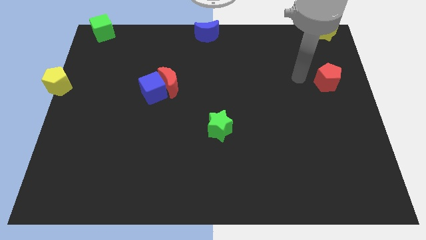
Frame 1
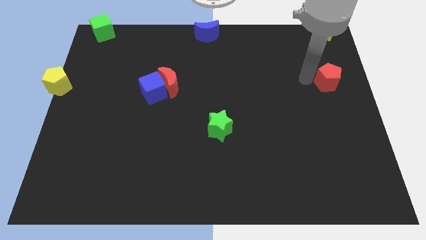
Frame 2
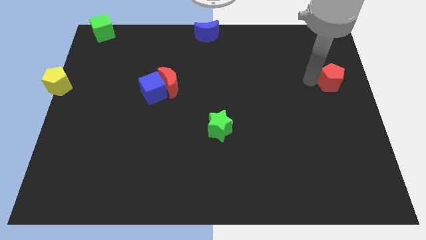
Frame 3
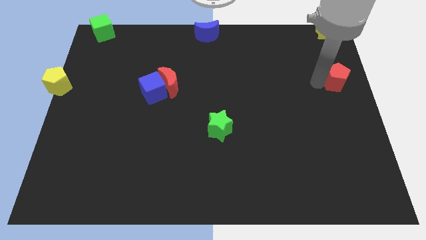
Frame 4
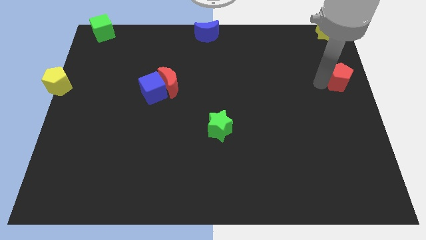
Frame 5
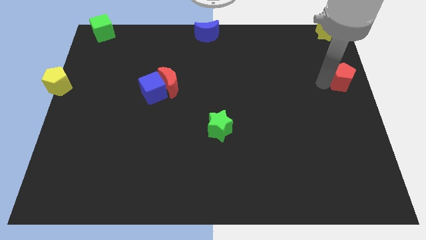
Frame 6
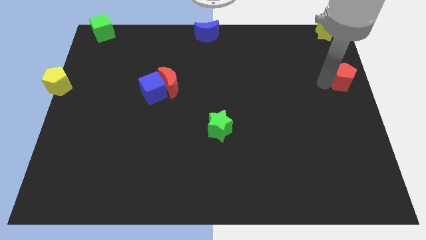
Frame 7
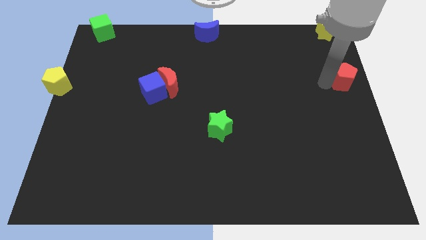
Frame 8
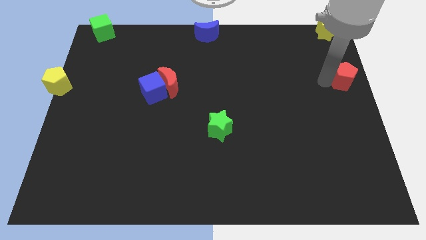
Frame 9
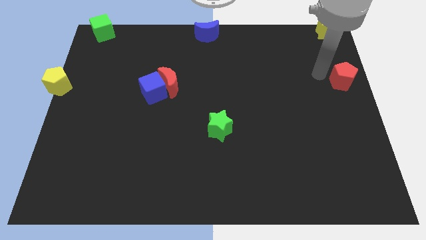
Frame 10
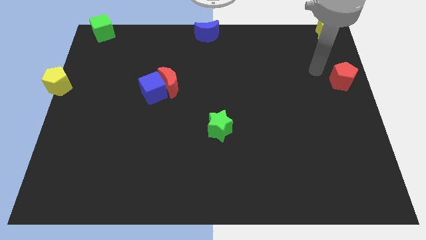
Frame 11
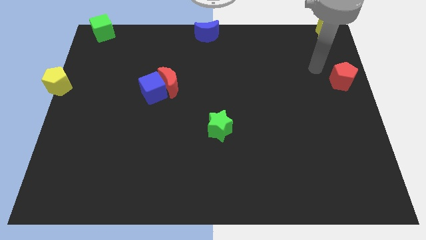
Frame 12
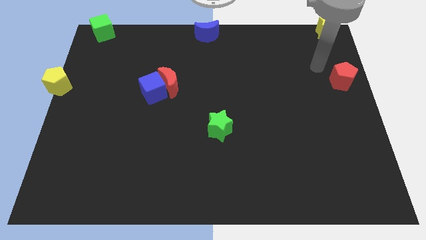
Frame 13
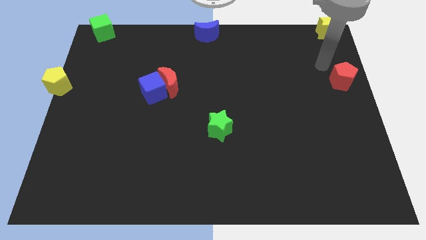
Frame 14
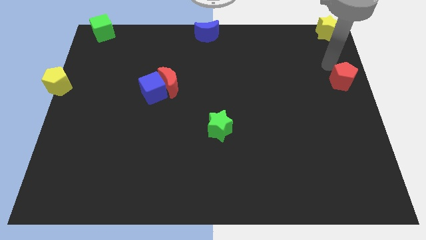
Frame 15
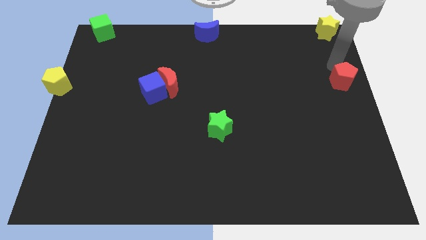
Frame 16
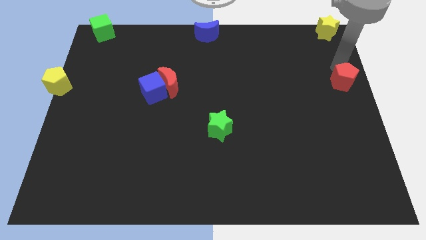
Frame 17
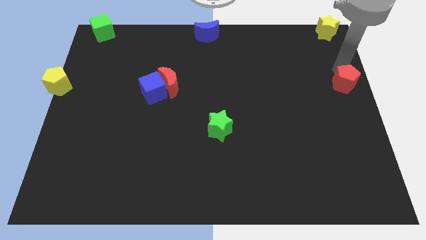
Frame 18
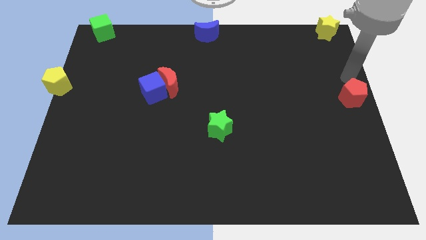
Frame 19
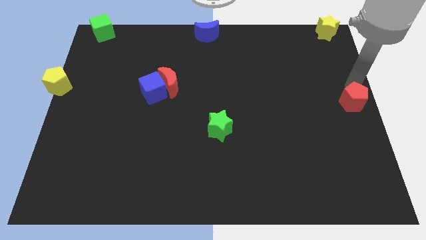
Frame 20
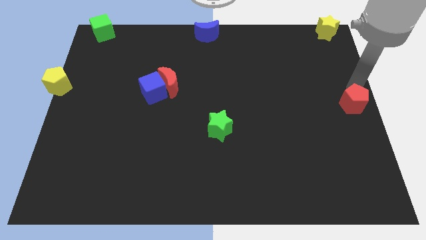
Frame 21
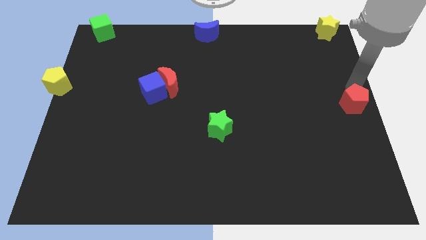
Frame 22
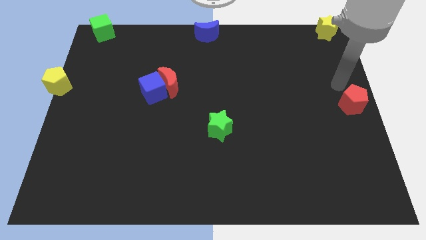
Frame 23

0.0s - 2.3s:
move the red pentagon to the center right

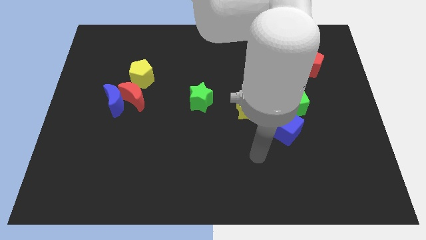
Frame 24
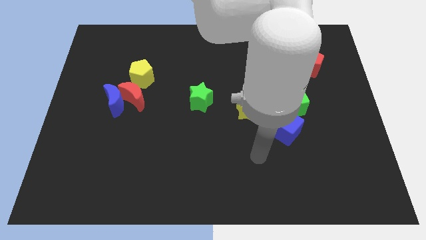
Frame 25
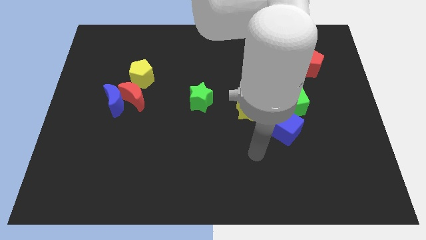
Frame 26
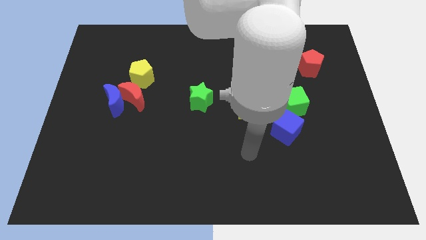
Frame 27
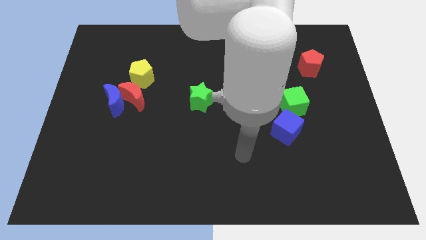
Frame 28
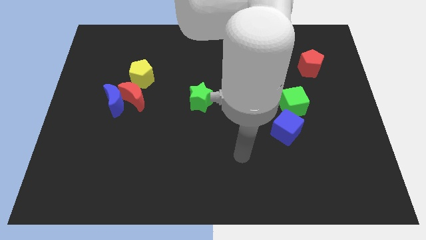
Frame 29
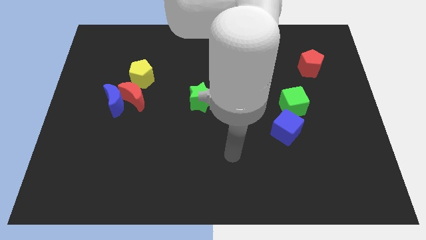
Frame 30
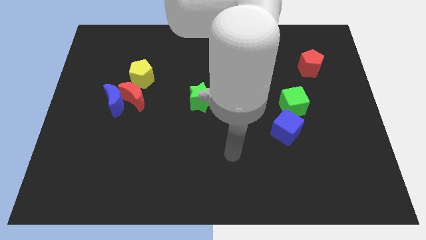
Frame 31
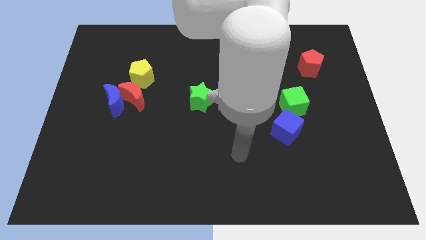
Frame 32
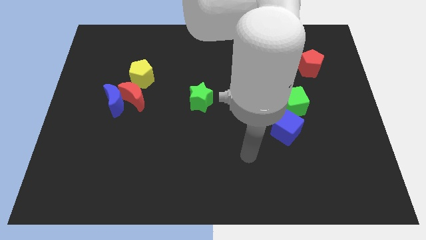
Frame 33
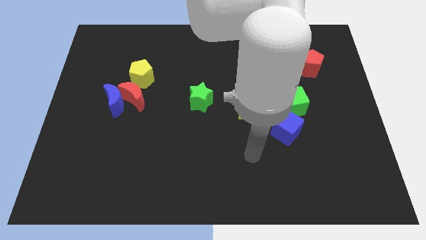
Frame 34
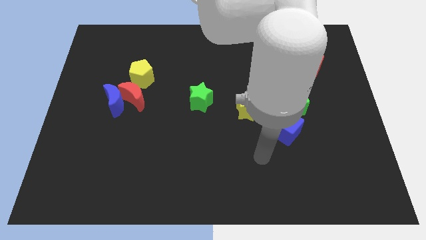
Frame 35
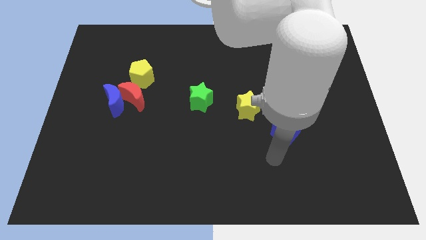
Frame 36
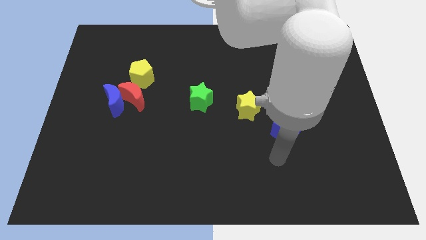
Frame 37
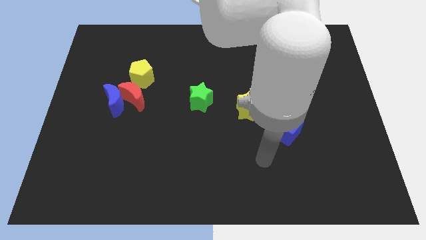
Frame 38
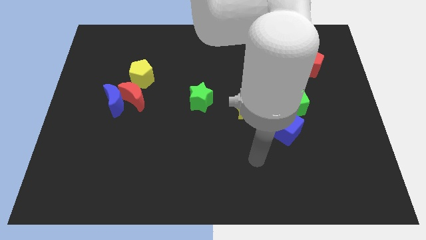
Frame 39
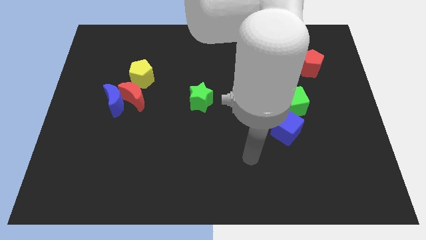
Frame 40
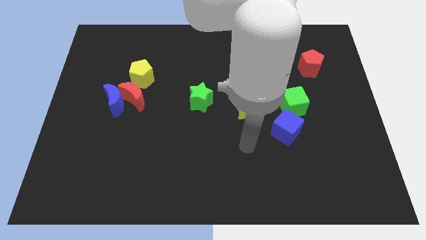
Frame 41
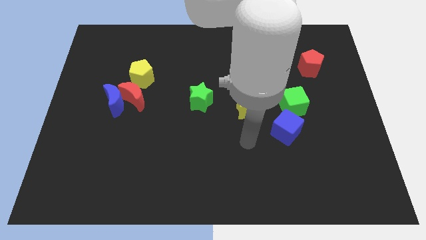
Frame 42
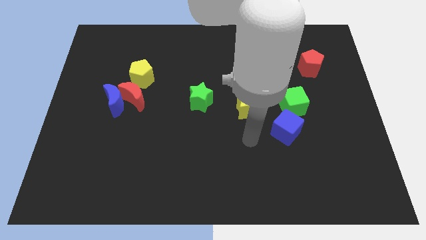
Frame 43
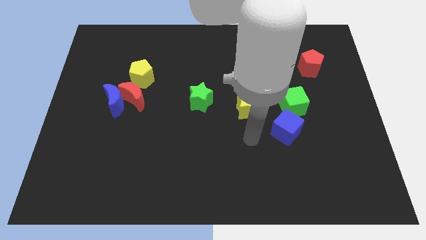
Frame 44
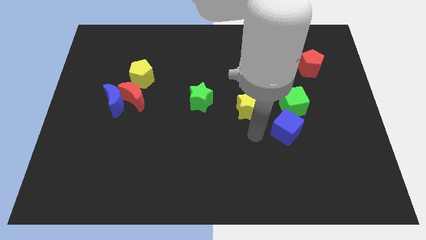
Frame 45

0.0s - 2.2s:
move the arm to the left of blue cube

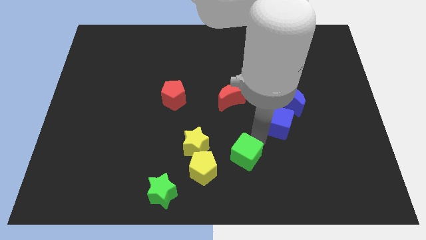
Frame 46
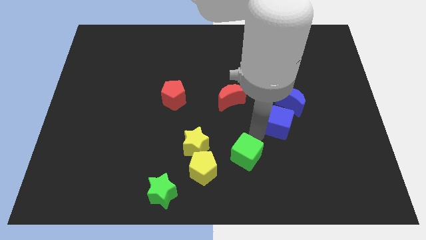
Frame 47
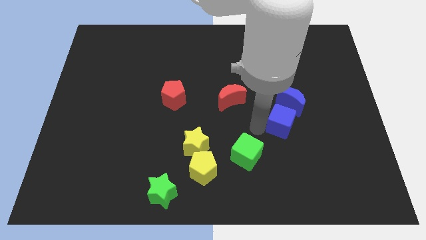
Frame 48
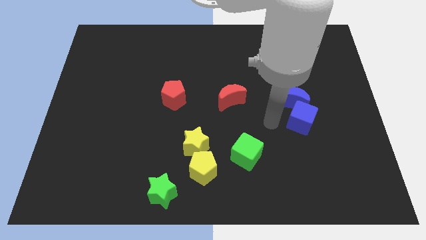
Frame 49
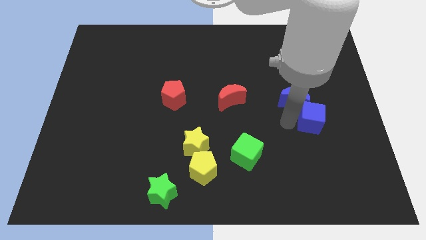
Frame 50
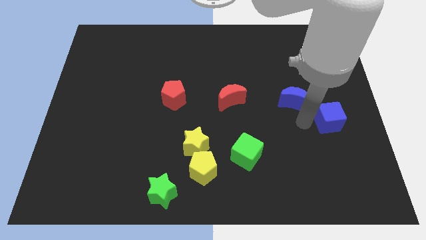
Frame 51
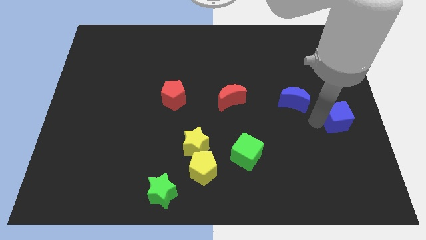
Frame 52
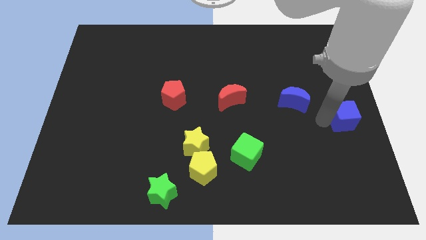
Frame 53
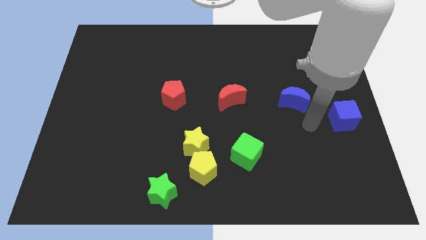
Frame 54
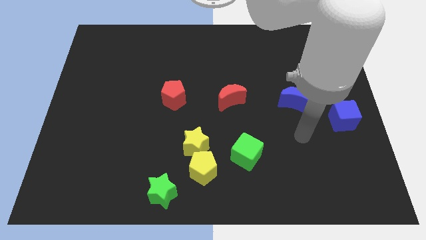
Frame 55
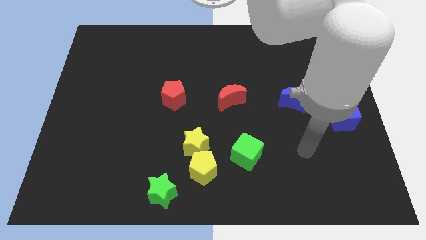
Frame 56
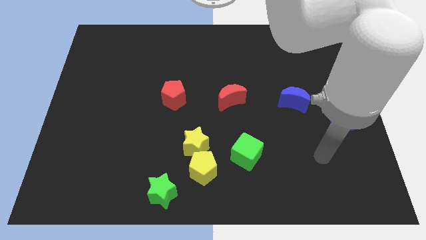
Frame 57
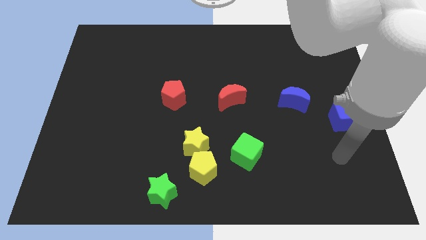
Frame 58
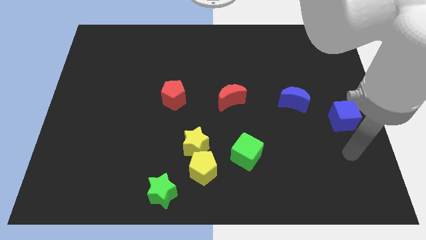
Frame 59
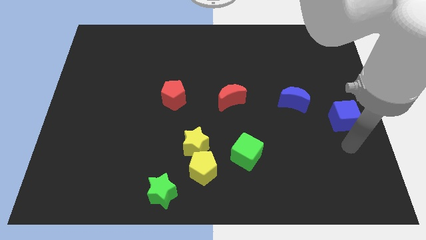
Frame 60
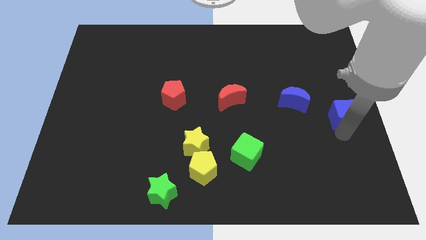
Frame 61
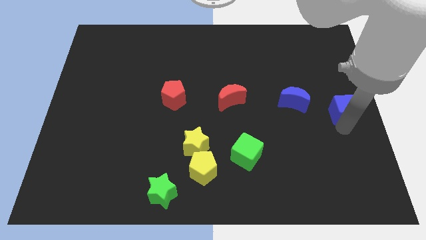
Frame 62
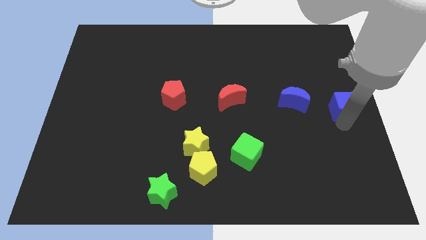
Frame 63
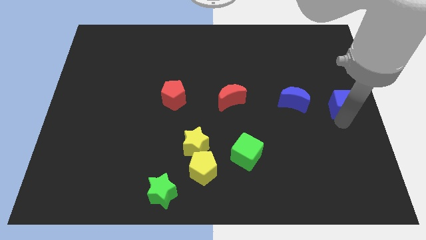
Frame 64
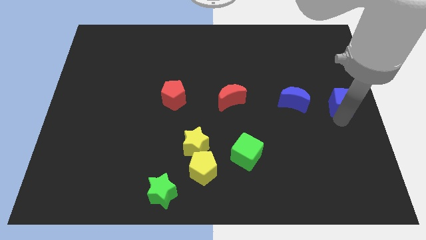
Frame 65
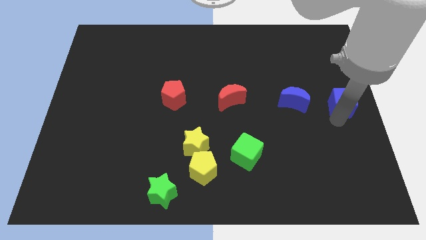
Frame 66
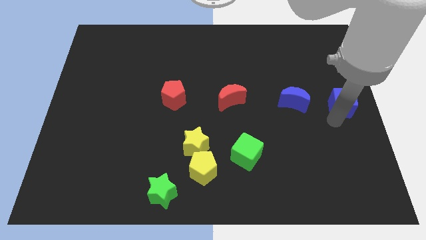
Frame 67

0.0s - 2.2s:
place blue cube at the center right

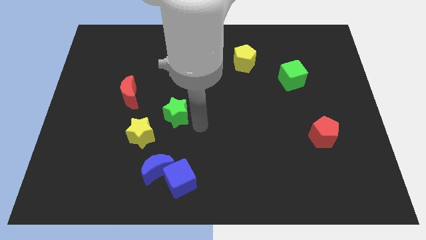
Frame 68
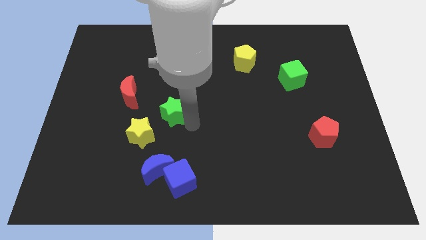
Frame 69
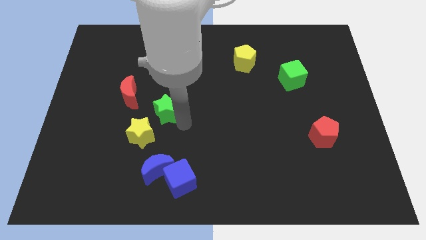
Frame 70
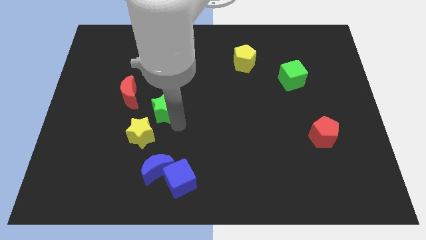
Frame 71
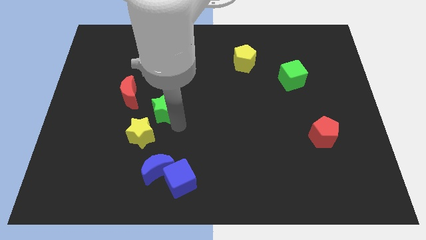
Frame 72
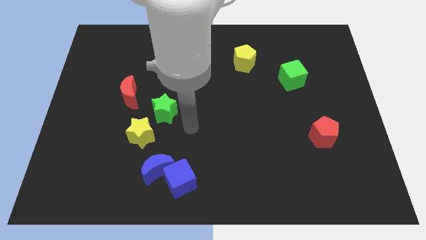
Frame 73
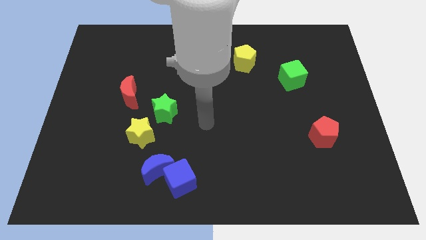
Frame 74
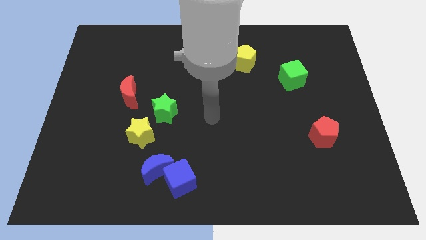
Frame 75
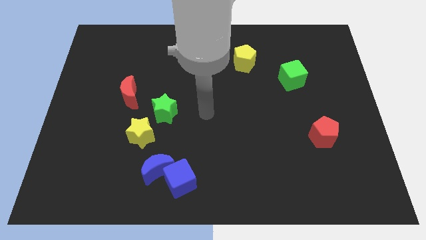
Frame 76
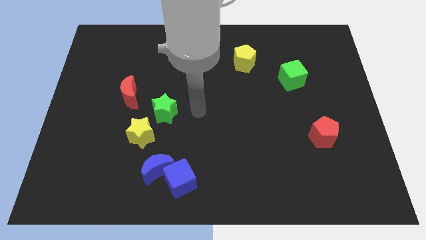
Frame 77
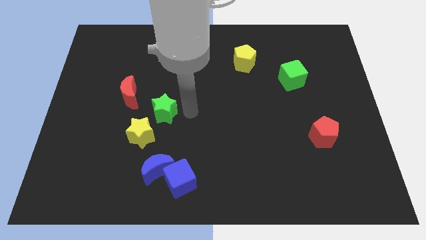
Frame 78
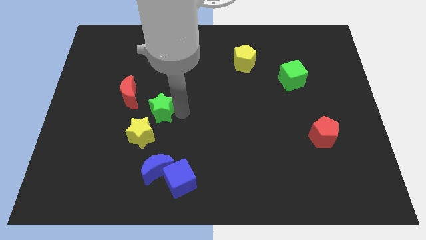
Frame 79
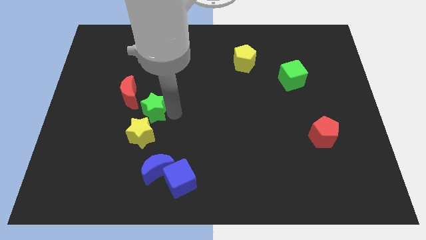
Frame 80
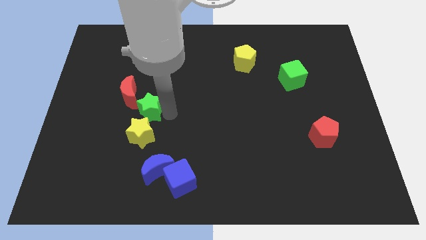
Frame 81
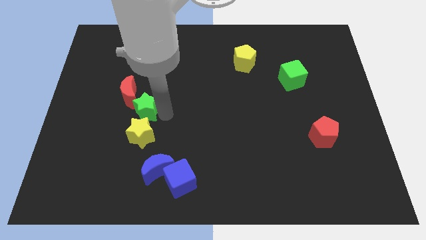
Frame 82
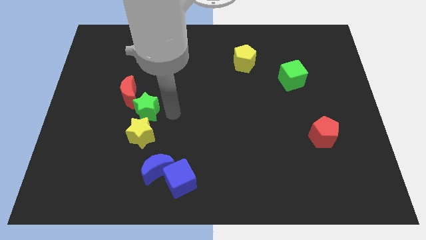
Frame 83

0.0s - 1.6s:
place the green star at the bottom right side of red moon

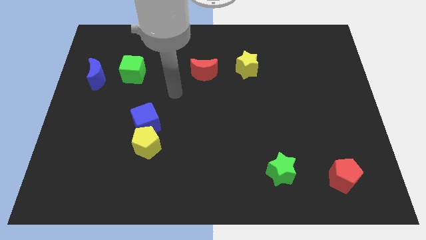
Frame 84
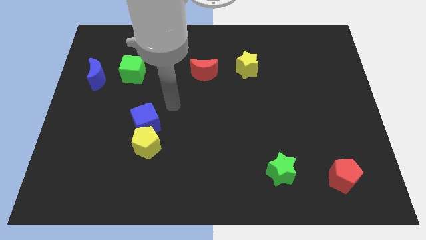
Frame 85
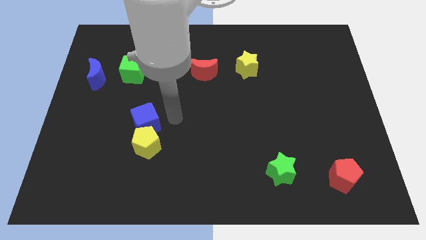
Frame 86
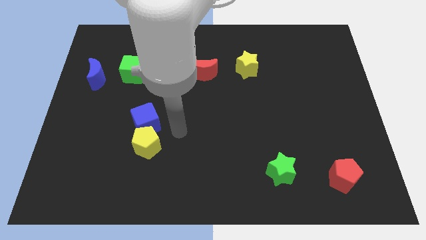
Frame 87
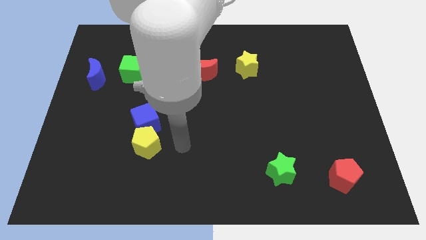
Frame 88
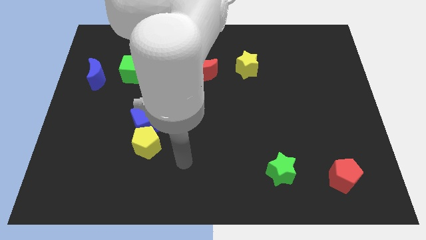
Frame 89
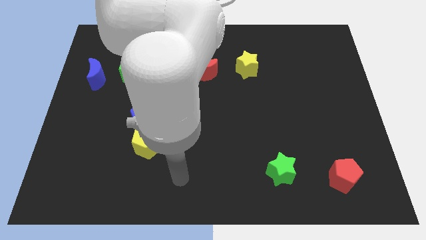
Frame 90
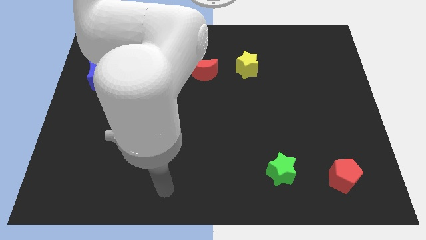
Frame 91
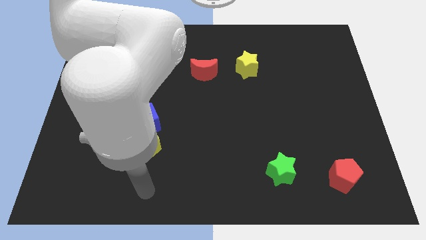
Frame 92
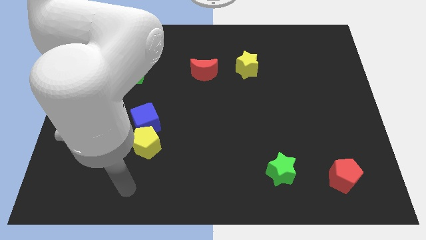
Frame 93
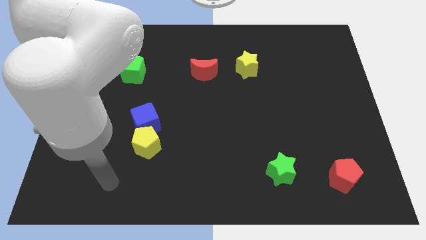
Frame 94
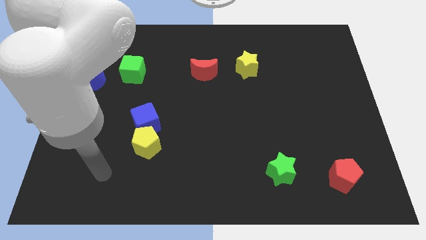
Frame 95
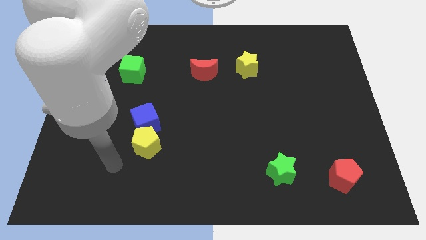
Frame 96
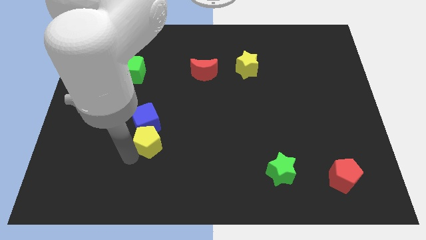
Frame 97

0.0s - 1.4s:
point your arm at the left of the yellow pentagon
